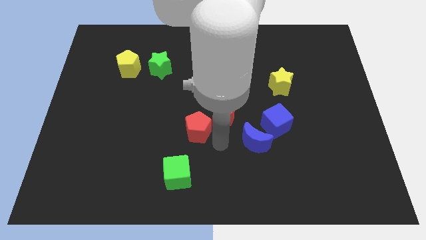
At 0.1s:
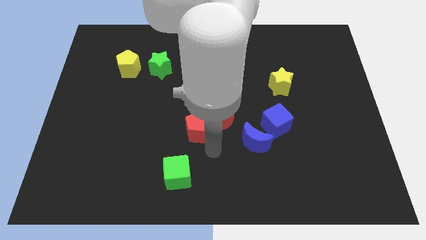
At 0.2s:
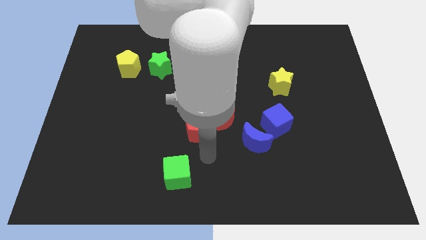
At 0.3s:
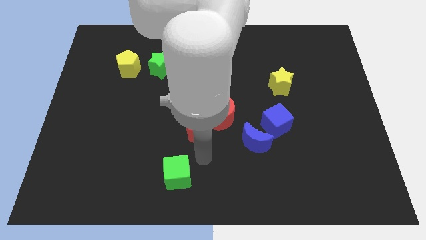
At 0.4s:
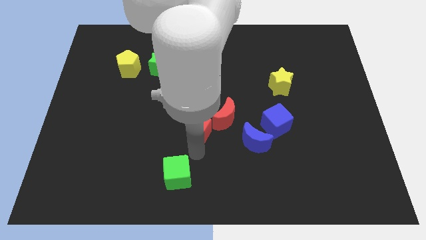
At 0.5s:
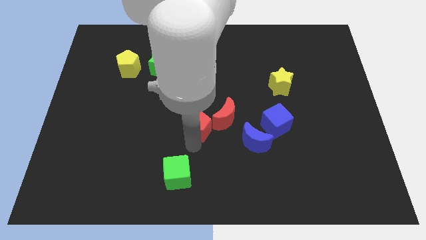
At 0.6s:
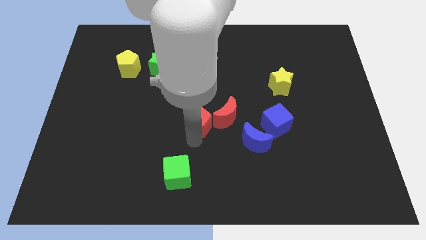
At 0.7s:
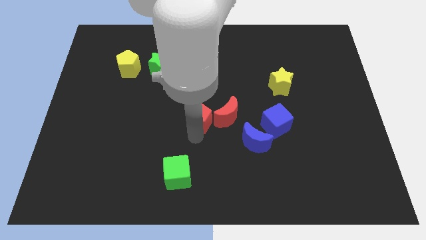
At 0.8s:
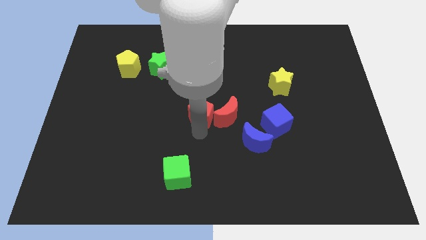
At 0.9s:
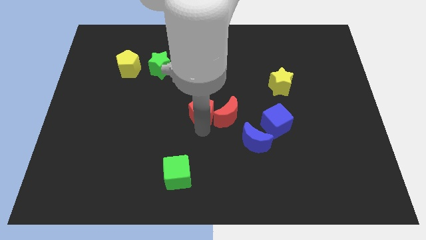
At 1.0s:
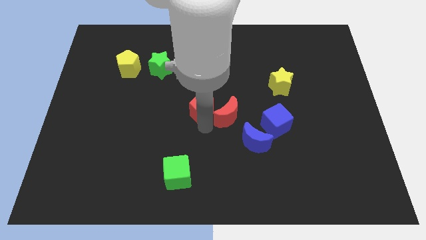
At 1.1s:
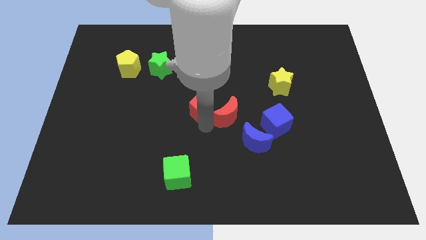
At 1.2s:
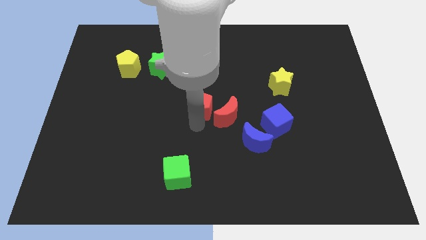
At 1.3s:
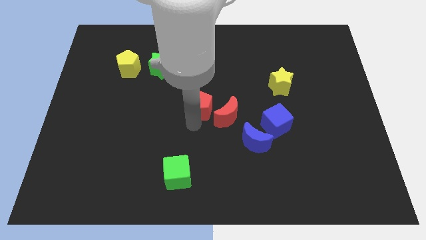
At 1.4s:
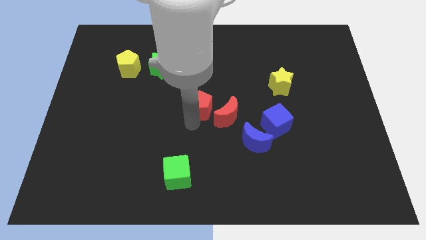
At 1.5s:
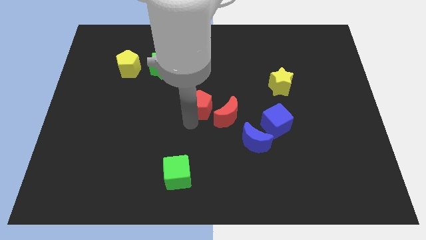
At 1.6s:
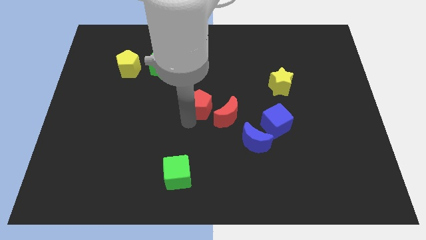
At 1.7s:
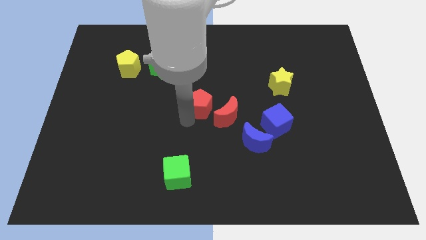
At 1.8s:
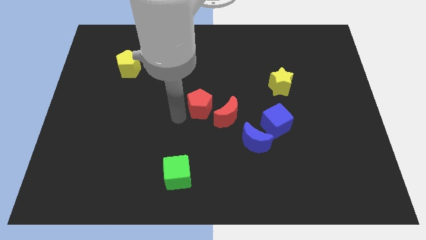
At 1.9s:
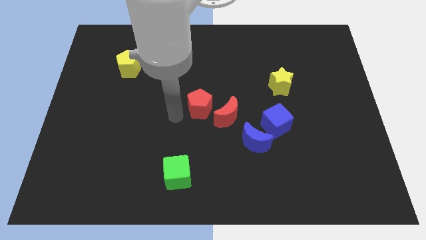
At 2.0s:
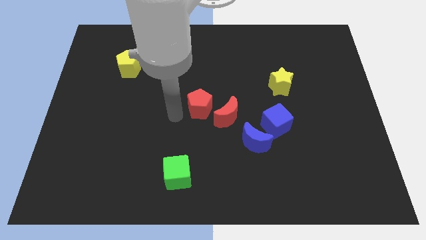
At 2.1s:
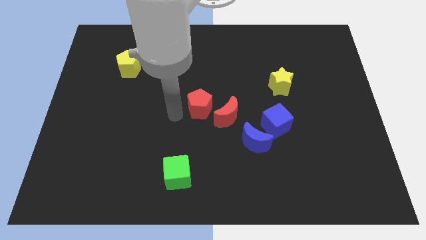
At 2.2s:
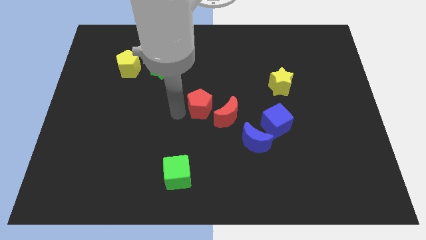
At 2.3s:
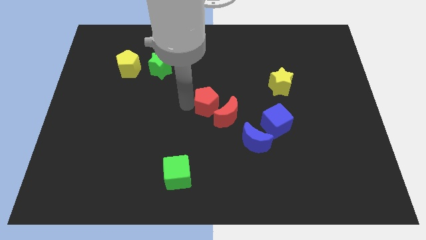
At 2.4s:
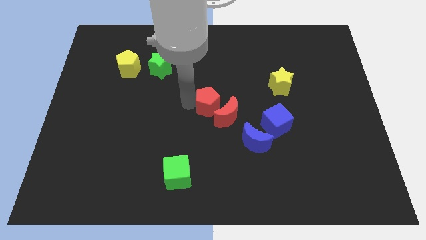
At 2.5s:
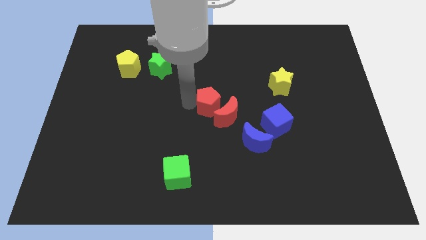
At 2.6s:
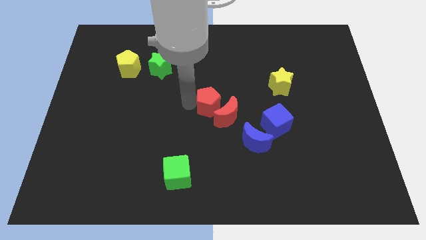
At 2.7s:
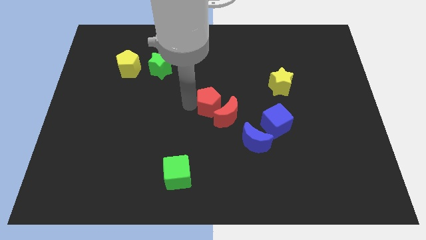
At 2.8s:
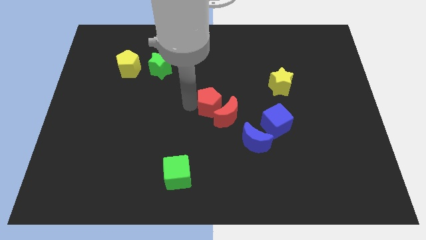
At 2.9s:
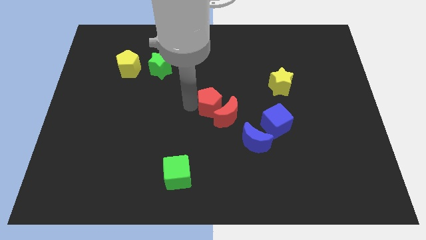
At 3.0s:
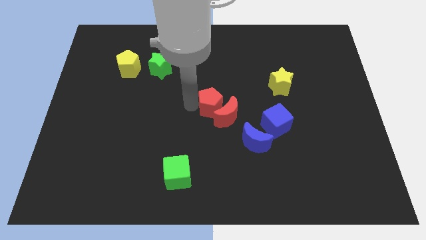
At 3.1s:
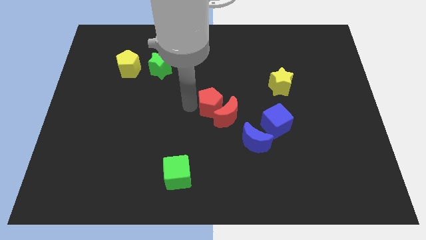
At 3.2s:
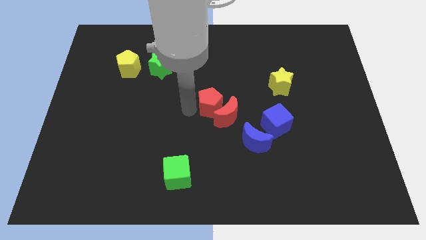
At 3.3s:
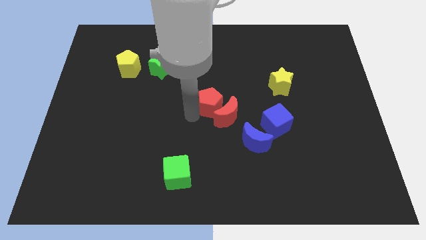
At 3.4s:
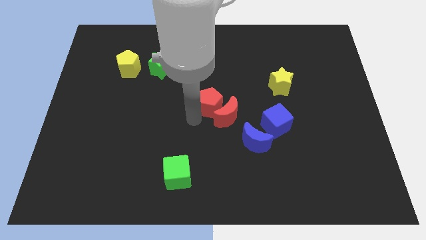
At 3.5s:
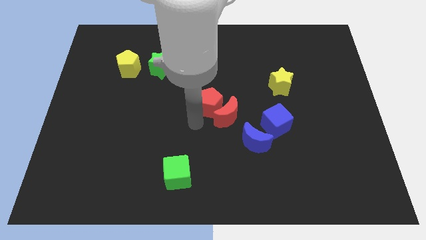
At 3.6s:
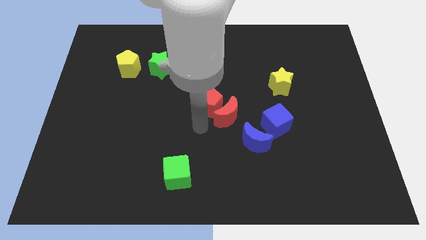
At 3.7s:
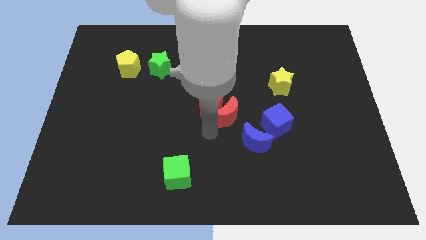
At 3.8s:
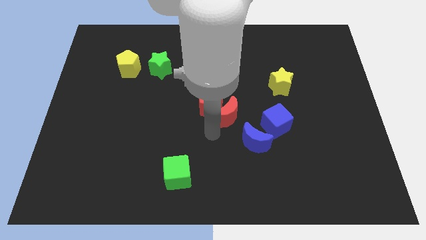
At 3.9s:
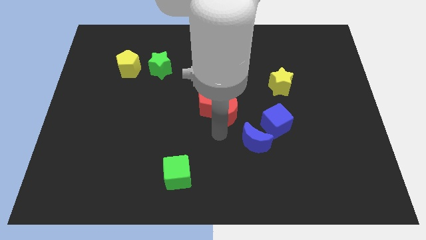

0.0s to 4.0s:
move the red pentagon towards left to the red crescent

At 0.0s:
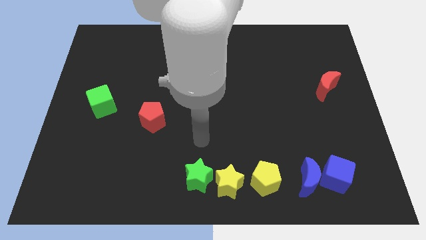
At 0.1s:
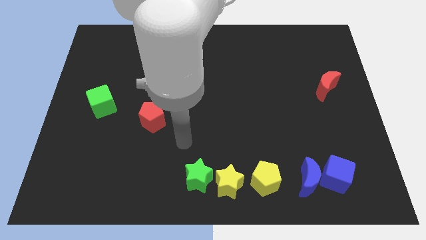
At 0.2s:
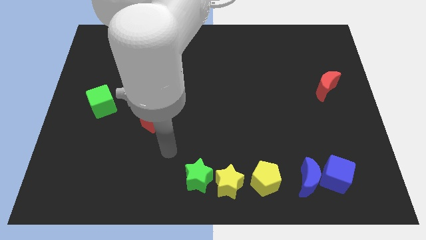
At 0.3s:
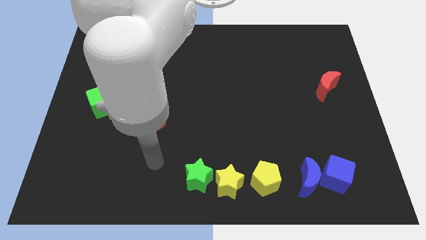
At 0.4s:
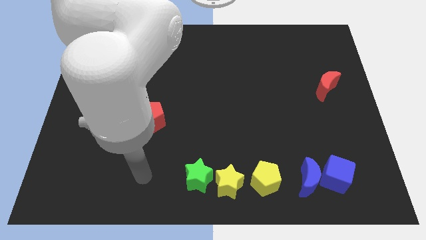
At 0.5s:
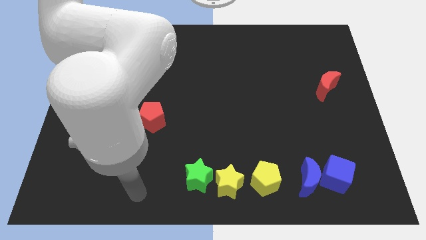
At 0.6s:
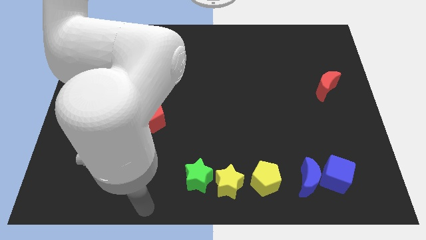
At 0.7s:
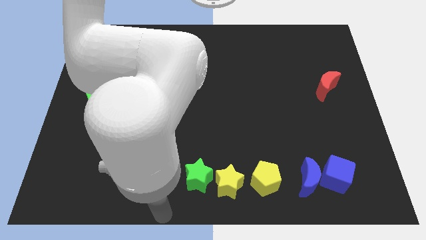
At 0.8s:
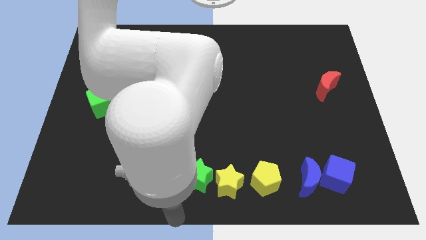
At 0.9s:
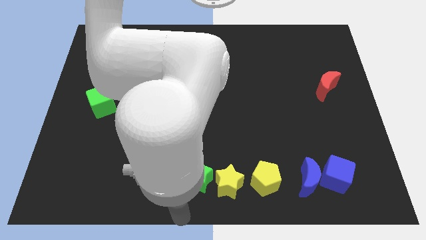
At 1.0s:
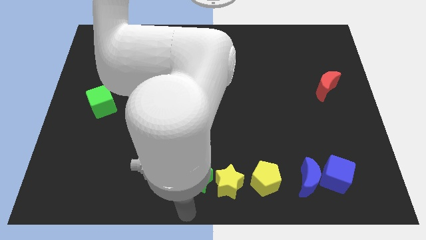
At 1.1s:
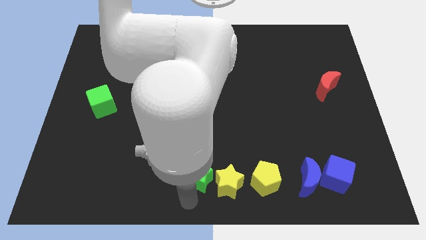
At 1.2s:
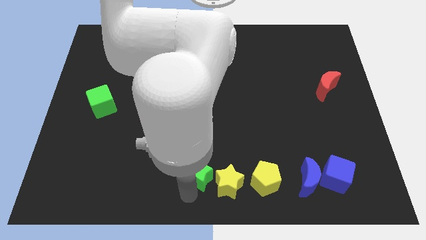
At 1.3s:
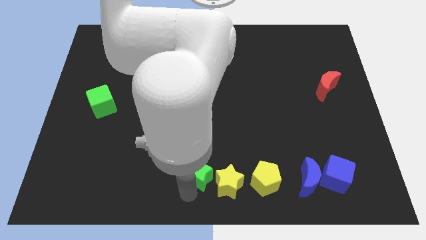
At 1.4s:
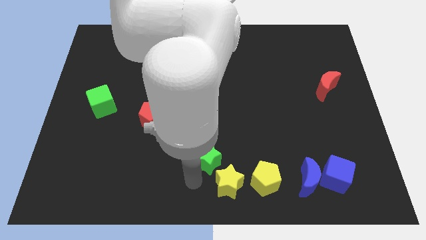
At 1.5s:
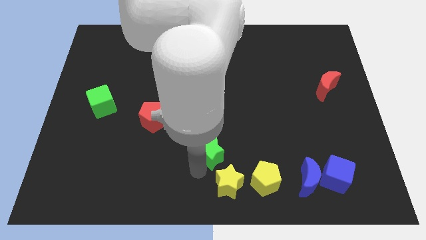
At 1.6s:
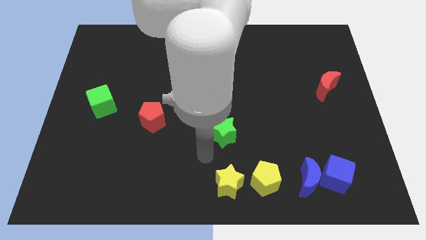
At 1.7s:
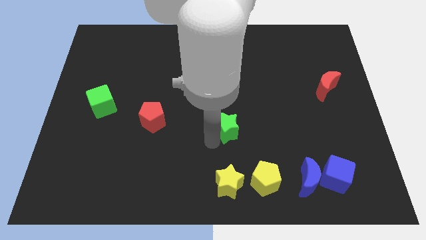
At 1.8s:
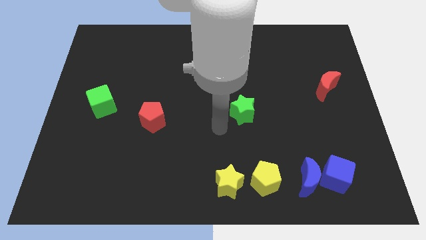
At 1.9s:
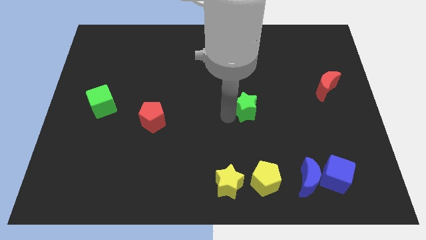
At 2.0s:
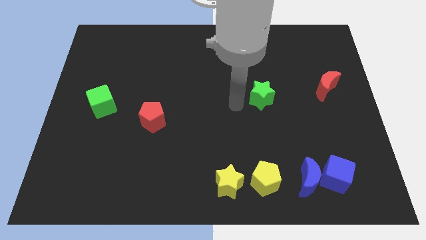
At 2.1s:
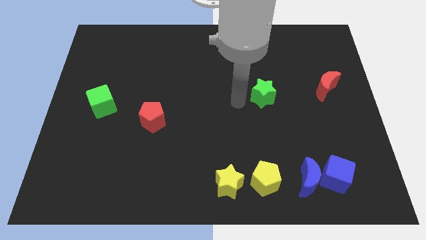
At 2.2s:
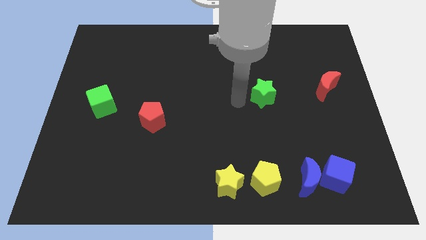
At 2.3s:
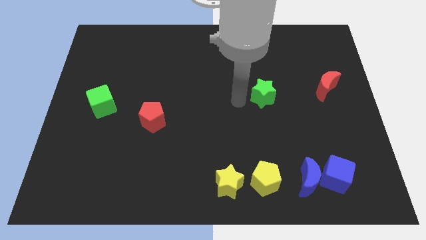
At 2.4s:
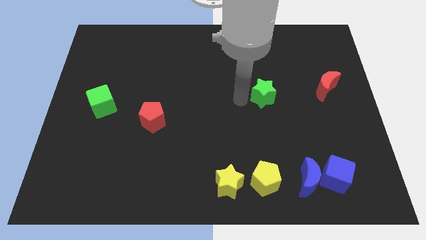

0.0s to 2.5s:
move green star away from yellow star

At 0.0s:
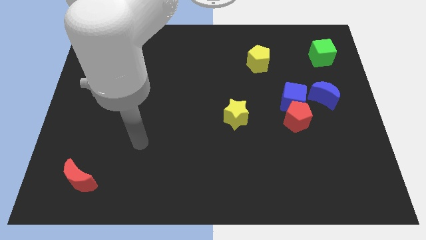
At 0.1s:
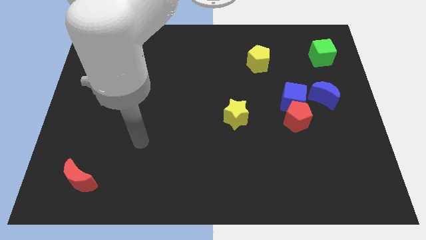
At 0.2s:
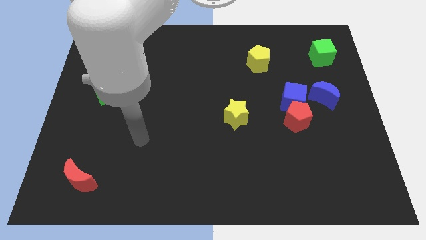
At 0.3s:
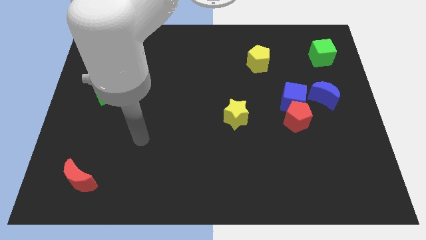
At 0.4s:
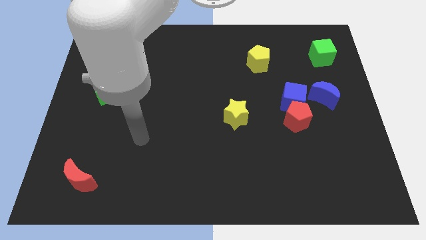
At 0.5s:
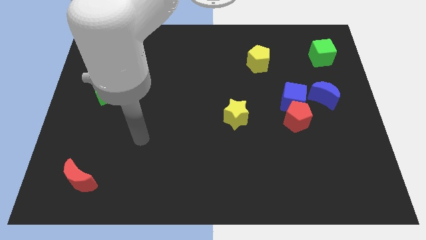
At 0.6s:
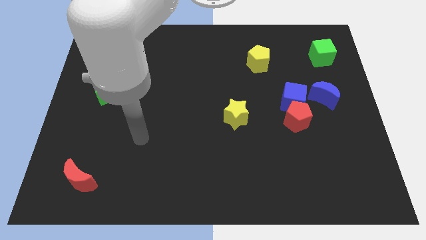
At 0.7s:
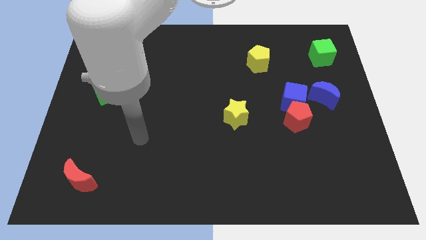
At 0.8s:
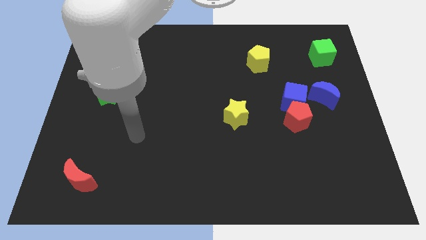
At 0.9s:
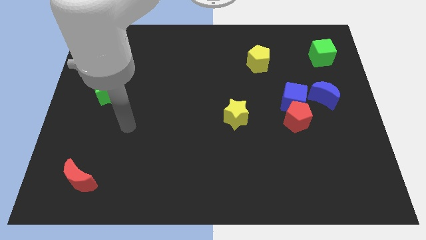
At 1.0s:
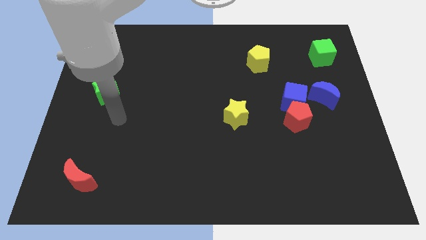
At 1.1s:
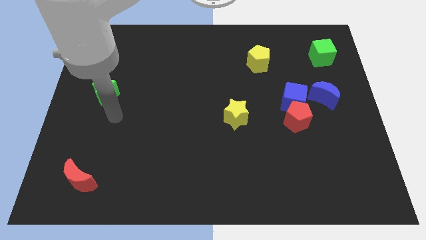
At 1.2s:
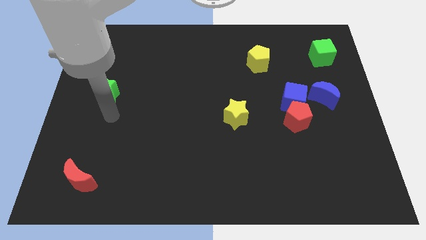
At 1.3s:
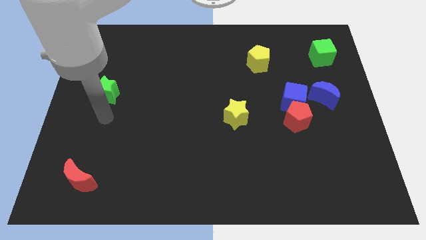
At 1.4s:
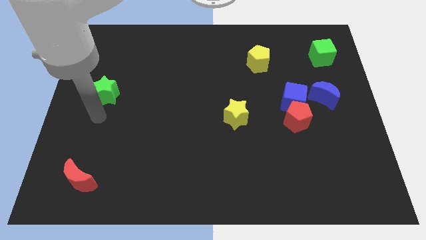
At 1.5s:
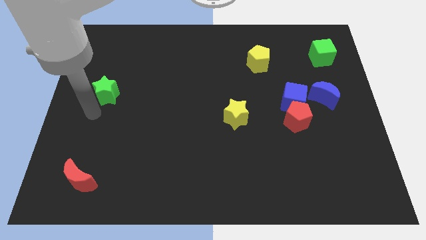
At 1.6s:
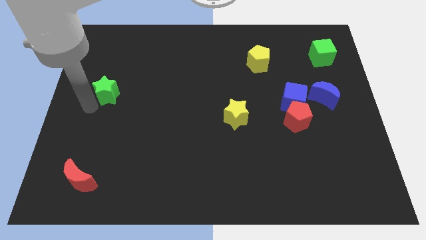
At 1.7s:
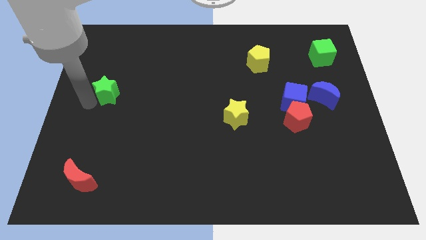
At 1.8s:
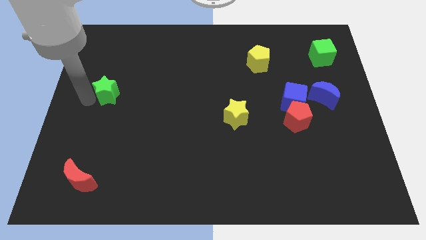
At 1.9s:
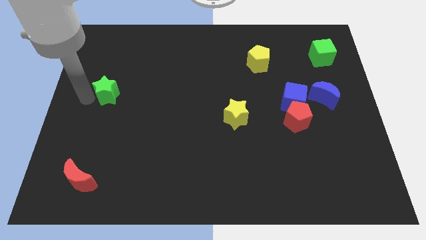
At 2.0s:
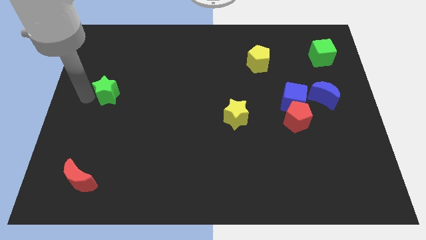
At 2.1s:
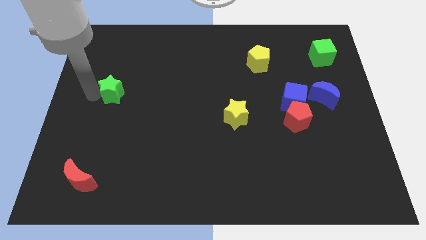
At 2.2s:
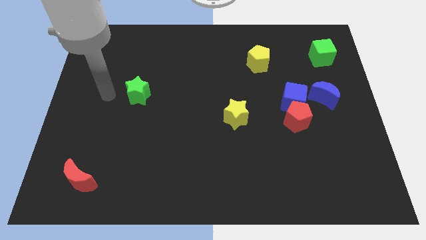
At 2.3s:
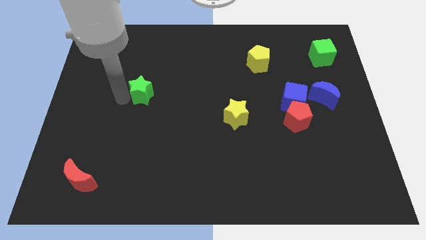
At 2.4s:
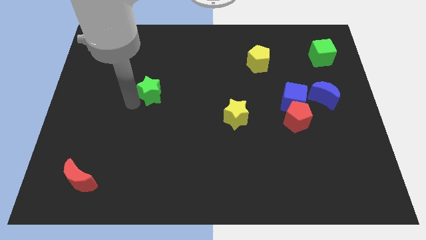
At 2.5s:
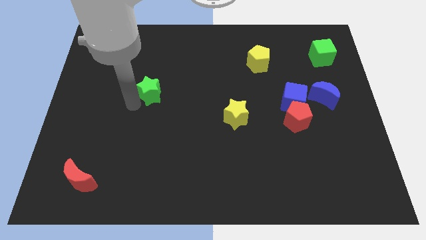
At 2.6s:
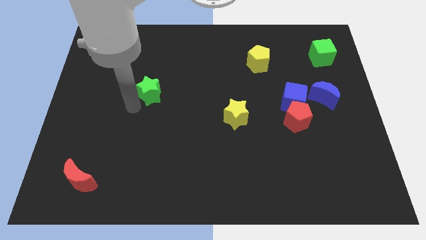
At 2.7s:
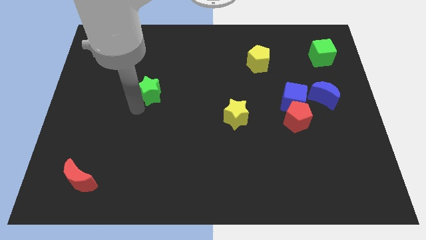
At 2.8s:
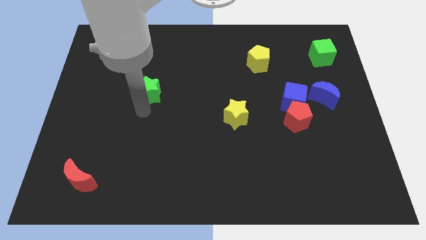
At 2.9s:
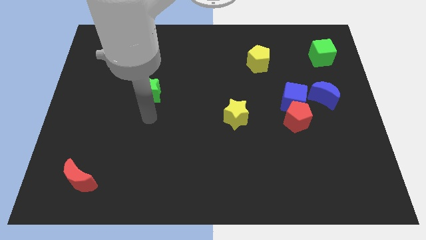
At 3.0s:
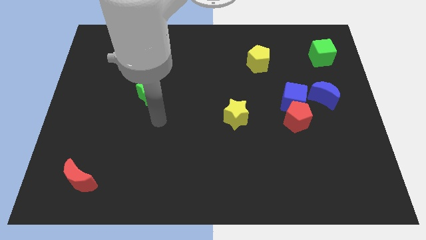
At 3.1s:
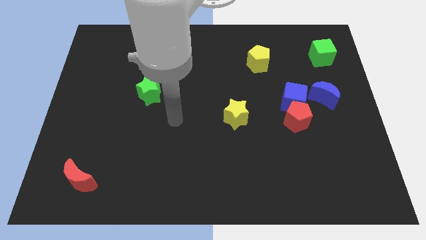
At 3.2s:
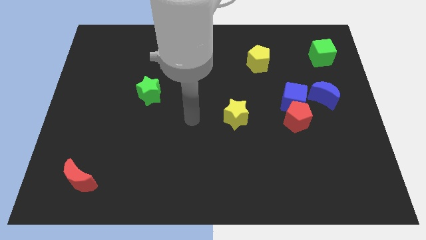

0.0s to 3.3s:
move the green star to the center left
